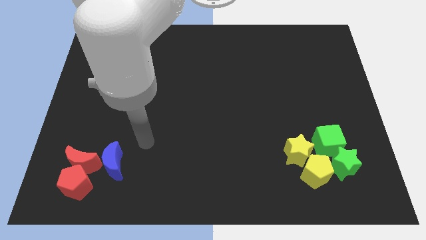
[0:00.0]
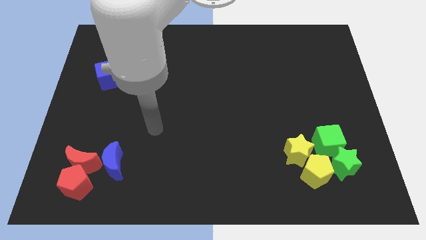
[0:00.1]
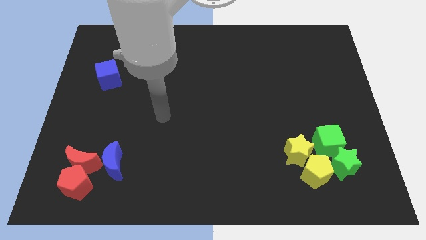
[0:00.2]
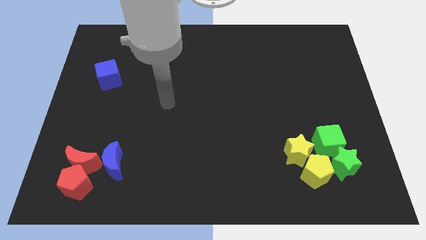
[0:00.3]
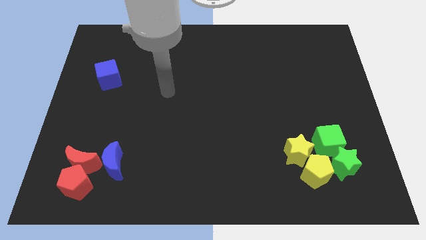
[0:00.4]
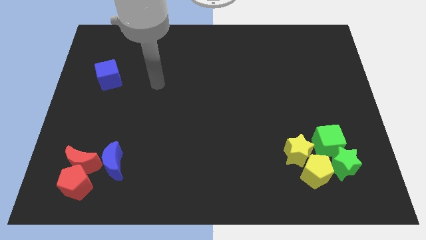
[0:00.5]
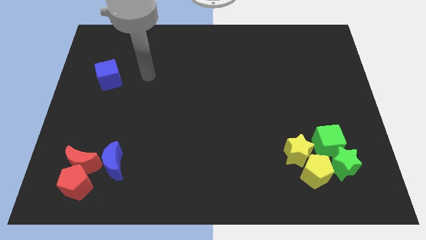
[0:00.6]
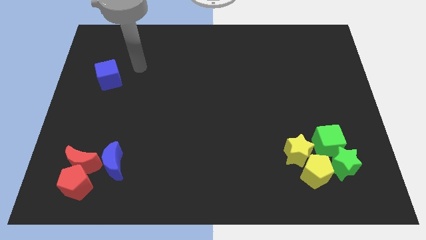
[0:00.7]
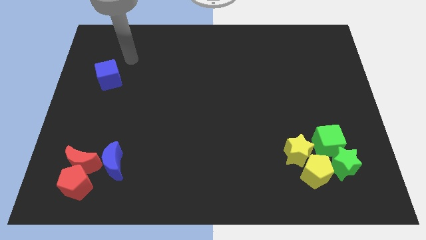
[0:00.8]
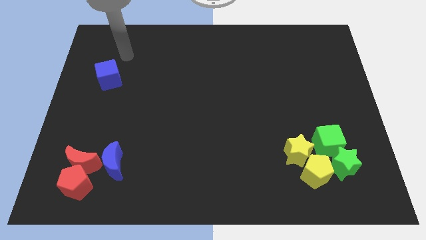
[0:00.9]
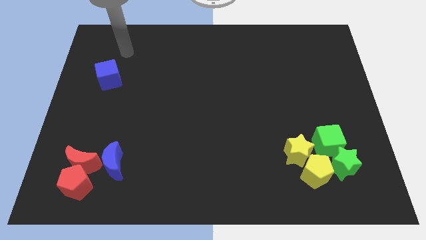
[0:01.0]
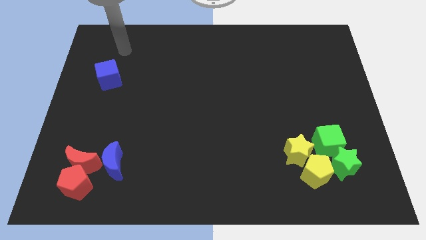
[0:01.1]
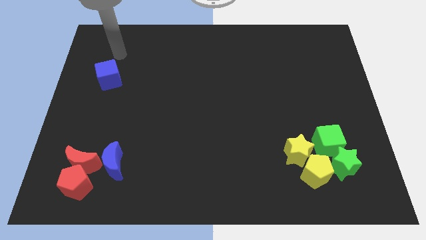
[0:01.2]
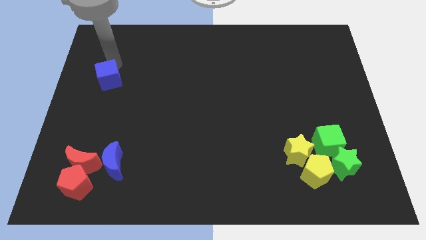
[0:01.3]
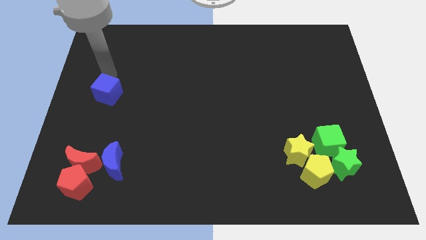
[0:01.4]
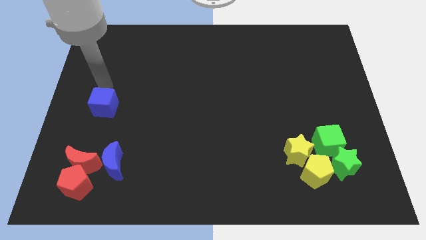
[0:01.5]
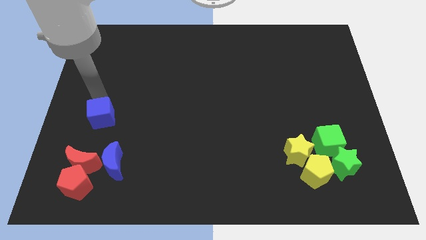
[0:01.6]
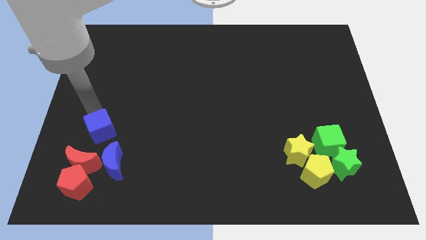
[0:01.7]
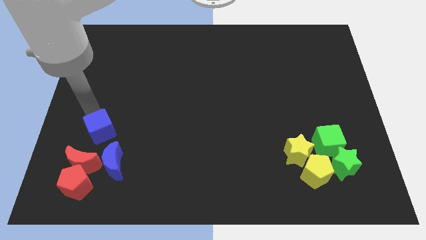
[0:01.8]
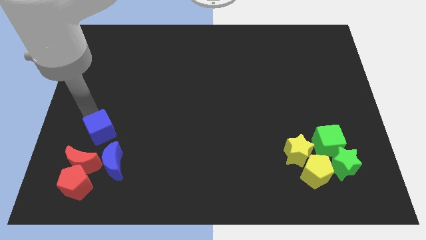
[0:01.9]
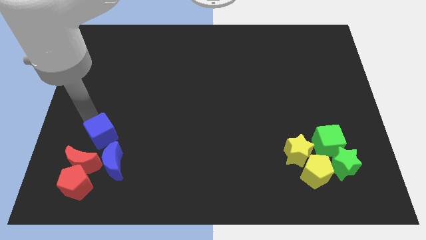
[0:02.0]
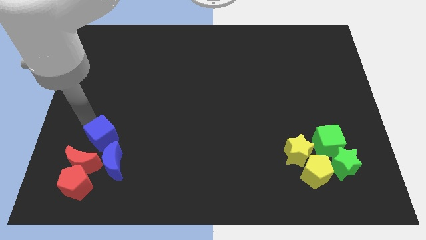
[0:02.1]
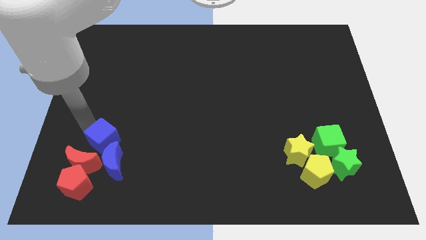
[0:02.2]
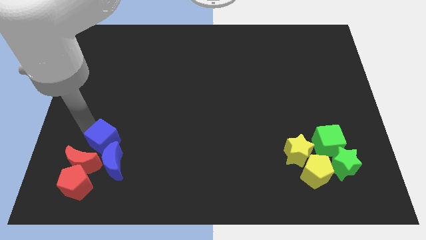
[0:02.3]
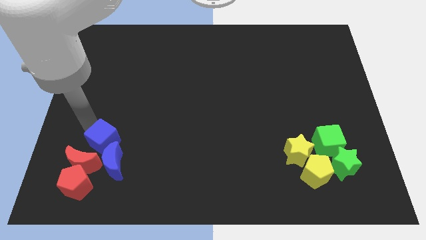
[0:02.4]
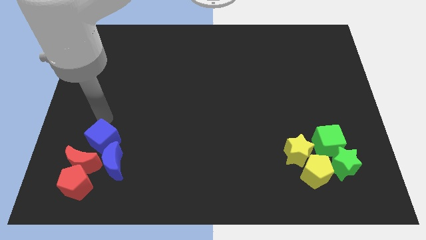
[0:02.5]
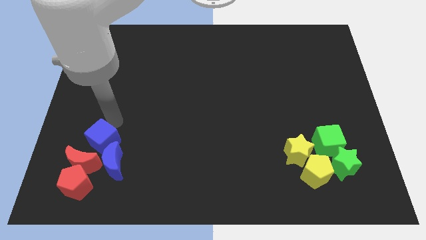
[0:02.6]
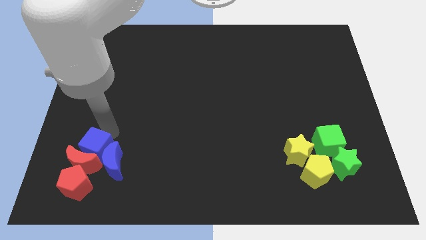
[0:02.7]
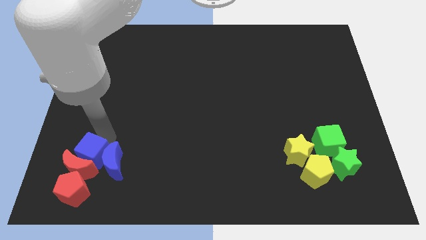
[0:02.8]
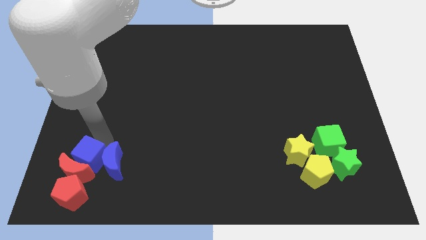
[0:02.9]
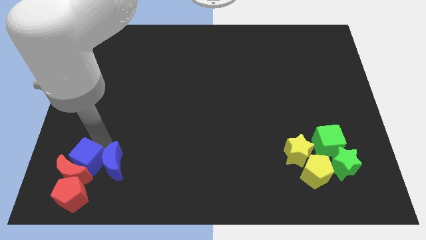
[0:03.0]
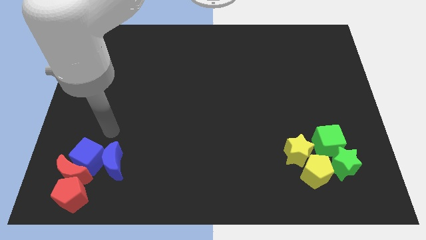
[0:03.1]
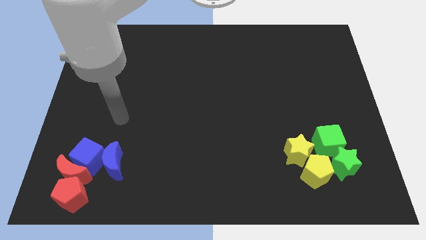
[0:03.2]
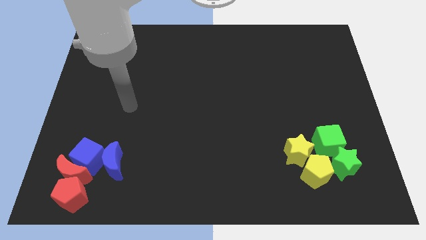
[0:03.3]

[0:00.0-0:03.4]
push the blue cube into the re crescent

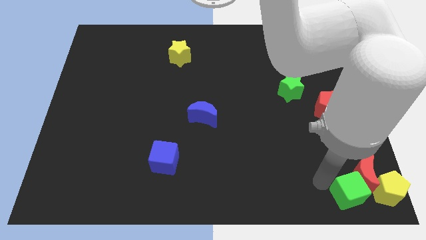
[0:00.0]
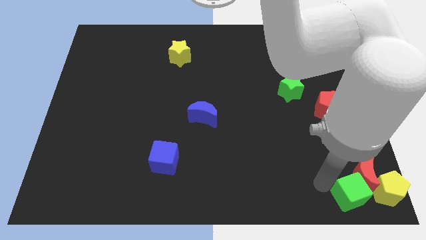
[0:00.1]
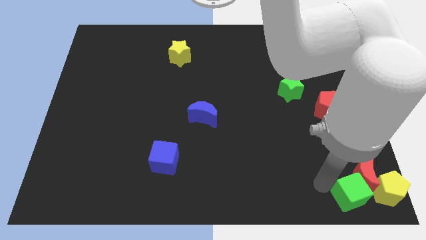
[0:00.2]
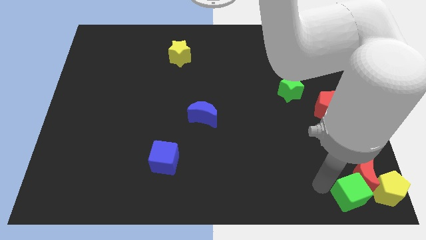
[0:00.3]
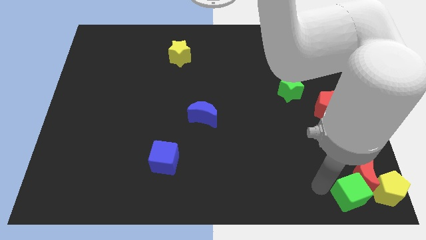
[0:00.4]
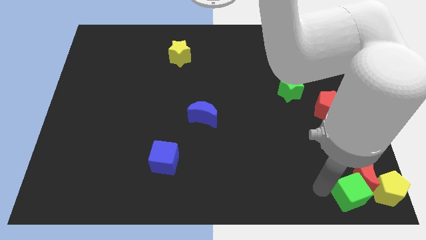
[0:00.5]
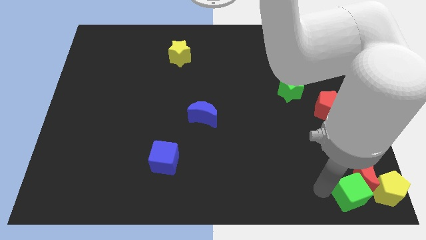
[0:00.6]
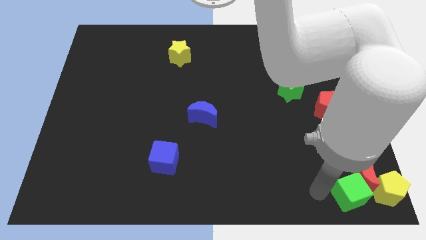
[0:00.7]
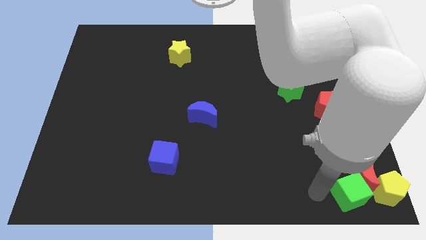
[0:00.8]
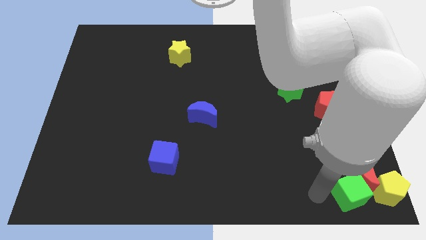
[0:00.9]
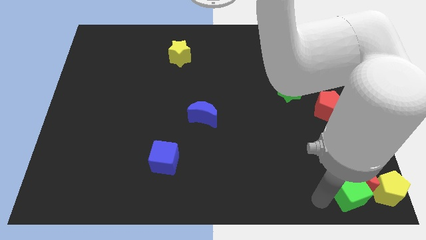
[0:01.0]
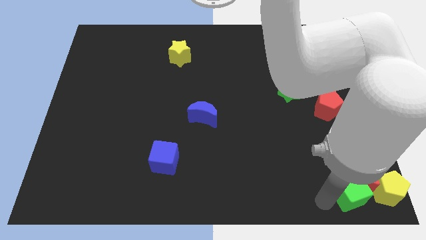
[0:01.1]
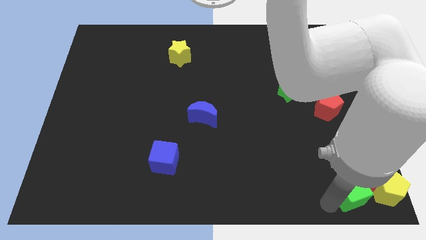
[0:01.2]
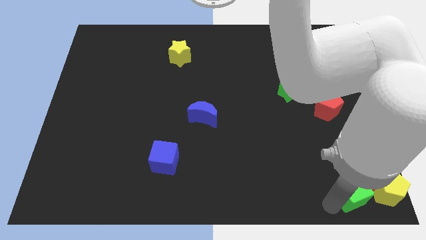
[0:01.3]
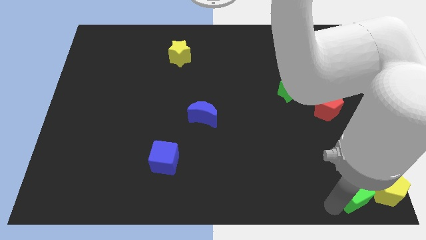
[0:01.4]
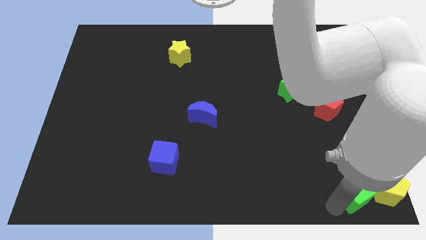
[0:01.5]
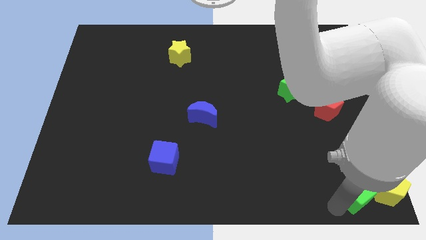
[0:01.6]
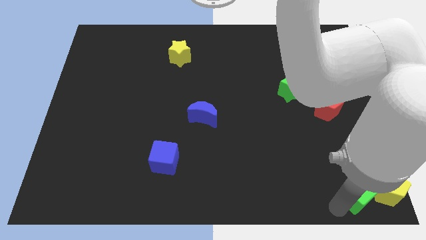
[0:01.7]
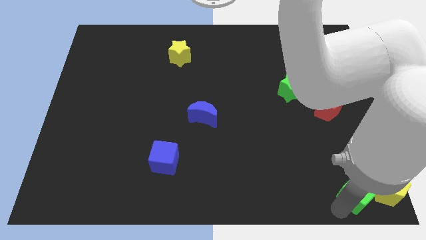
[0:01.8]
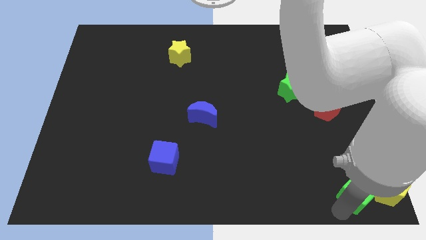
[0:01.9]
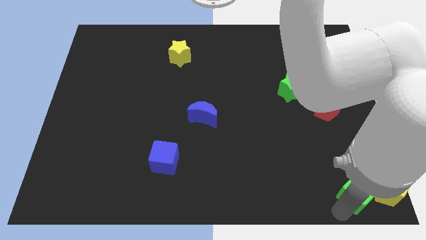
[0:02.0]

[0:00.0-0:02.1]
push the green cube towards the bottom

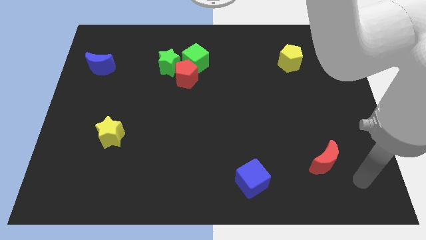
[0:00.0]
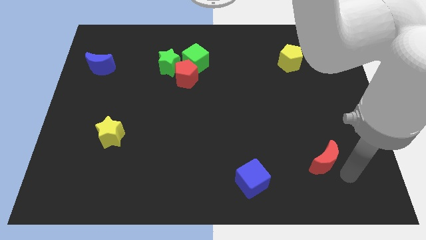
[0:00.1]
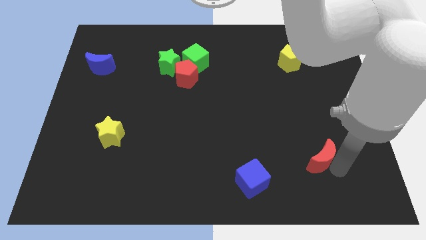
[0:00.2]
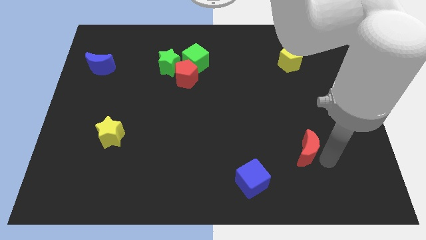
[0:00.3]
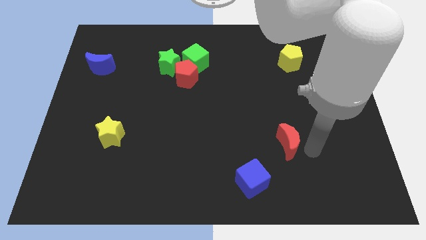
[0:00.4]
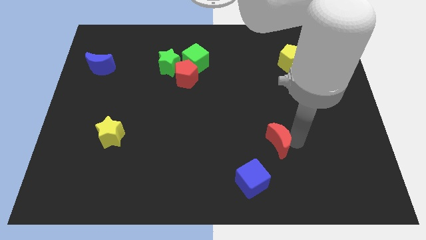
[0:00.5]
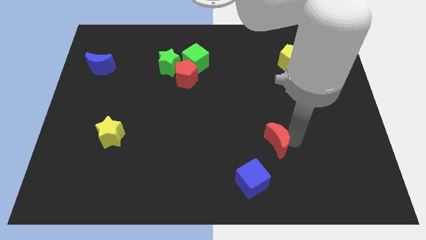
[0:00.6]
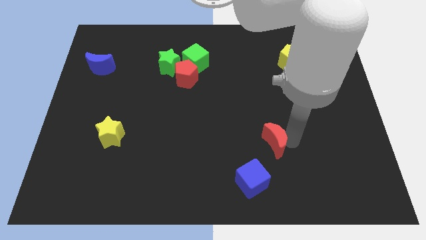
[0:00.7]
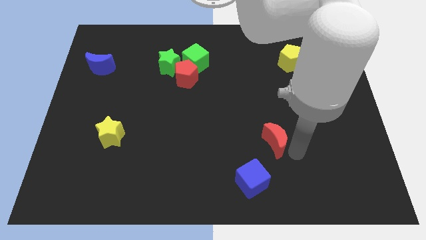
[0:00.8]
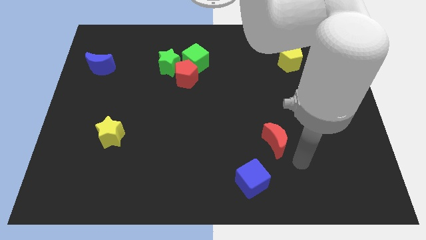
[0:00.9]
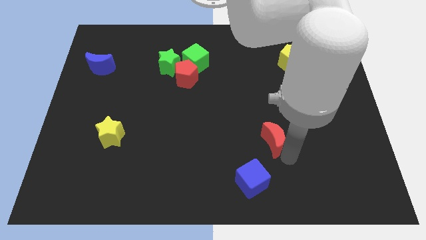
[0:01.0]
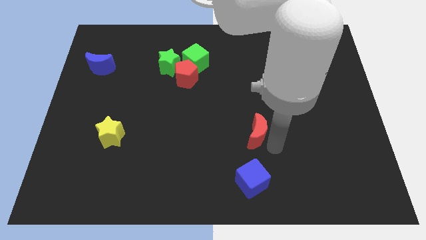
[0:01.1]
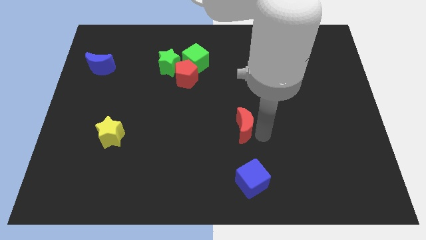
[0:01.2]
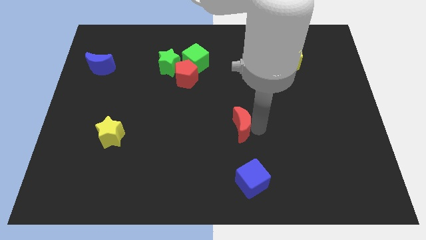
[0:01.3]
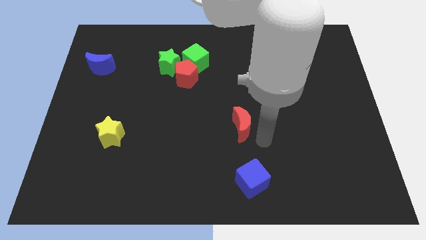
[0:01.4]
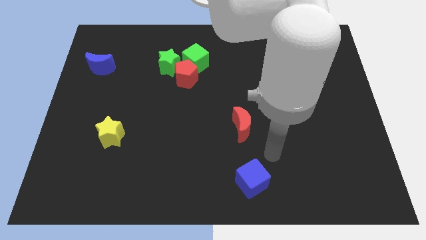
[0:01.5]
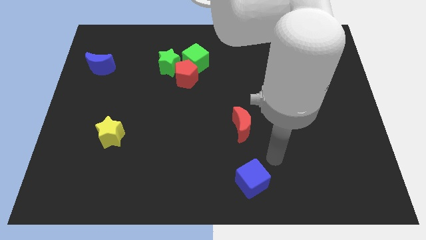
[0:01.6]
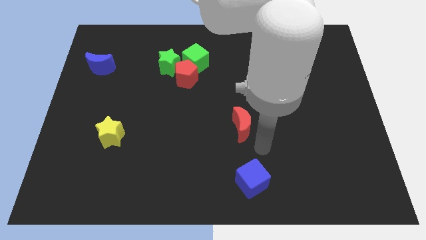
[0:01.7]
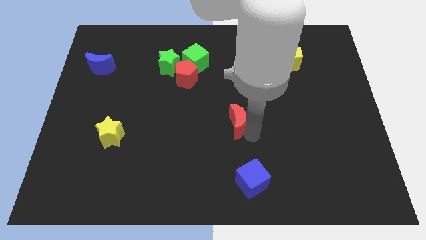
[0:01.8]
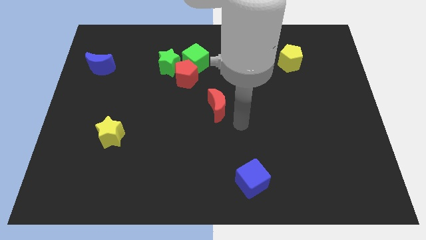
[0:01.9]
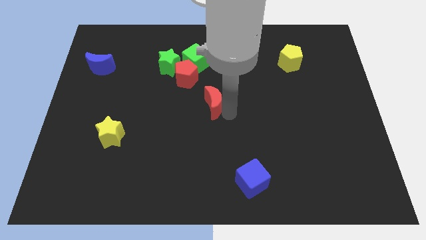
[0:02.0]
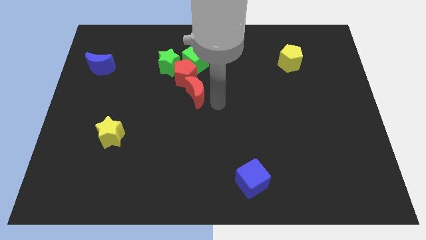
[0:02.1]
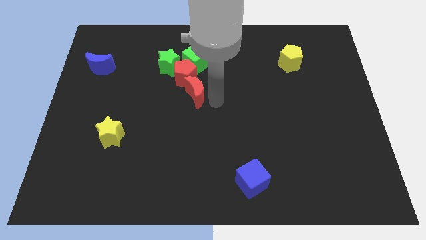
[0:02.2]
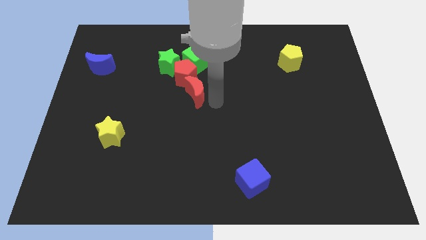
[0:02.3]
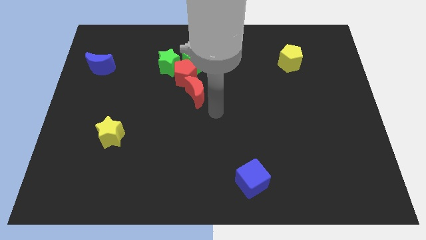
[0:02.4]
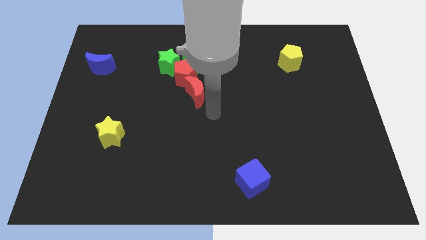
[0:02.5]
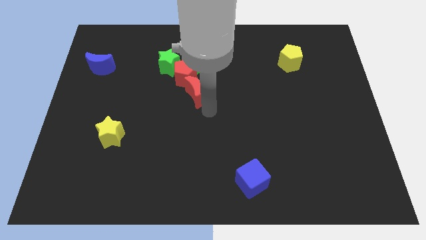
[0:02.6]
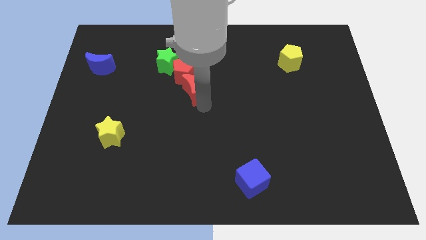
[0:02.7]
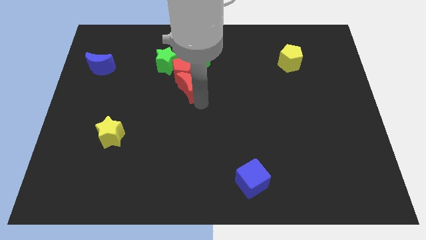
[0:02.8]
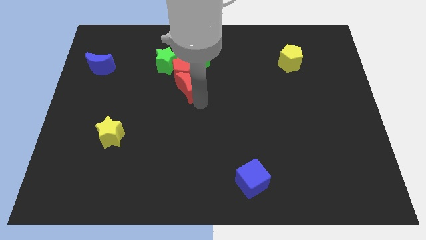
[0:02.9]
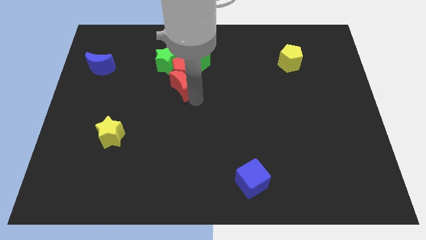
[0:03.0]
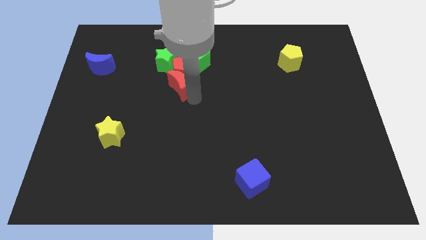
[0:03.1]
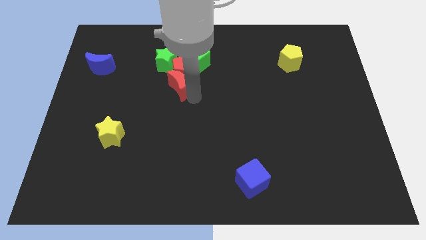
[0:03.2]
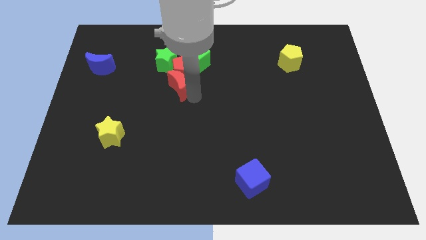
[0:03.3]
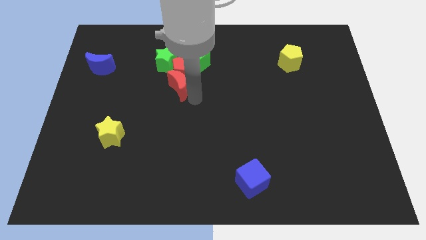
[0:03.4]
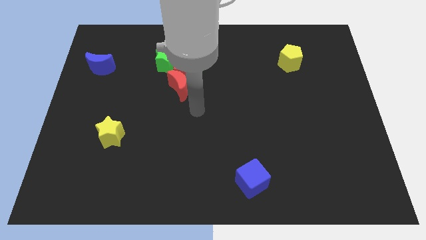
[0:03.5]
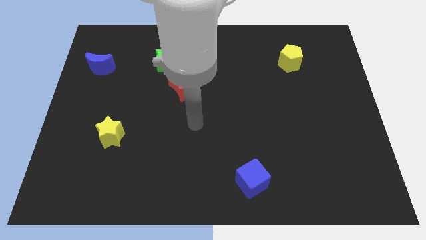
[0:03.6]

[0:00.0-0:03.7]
push the red pentagon into the red crescent
